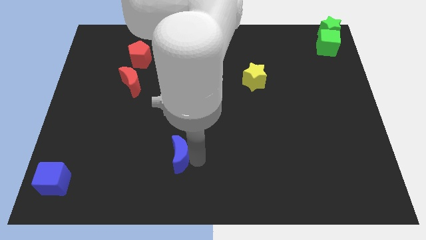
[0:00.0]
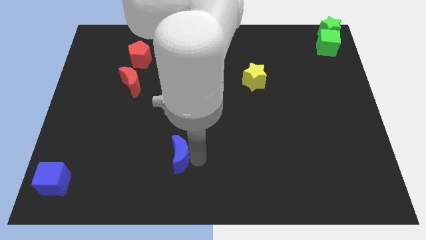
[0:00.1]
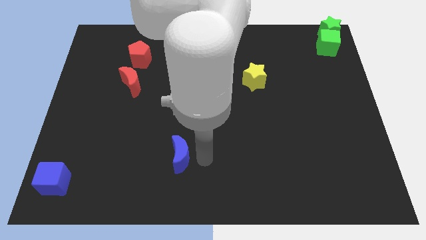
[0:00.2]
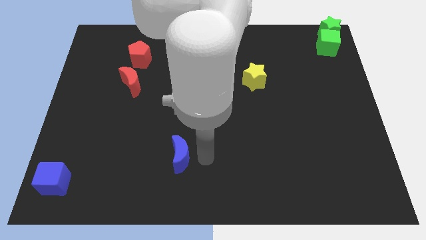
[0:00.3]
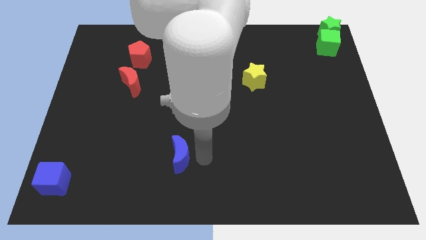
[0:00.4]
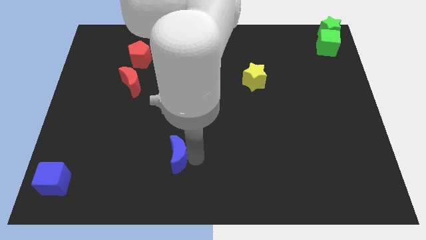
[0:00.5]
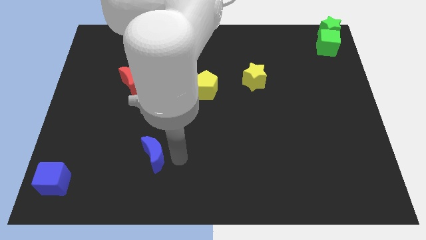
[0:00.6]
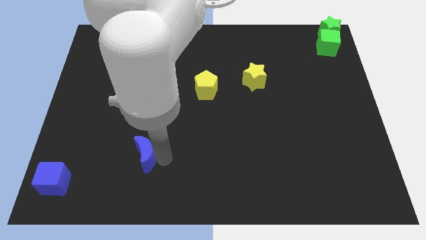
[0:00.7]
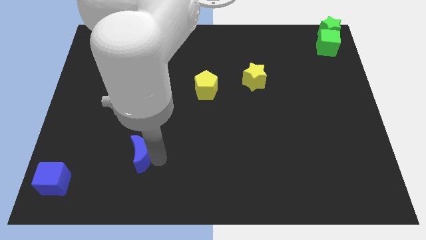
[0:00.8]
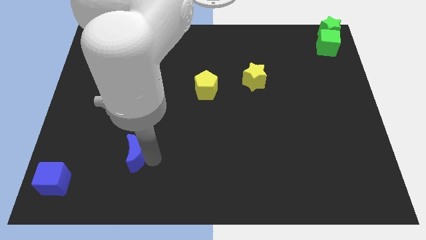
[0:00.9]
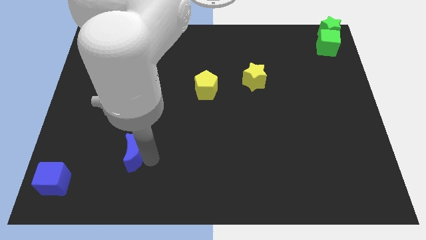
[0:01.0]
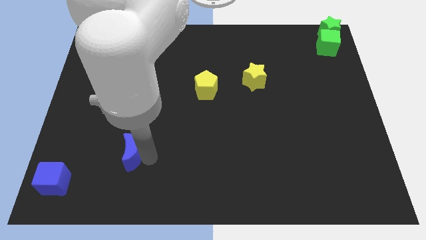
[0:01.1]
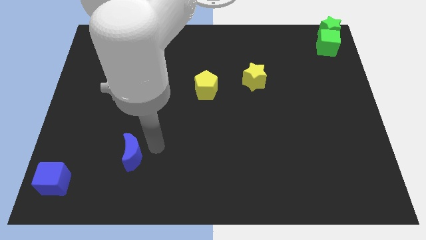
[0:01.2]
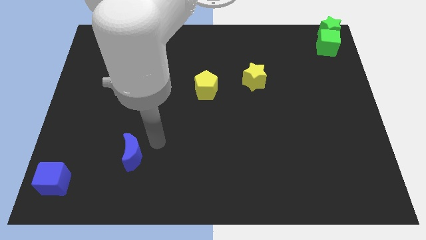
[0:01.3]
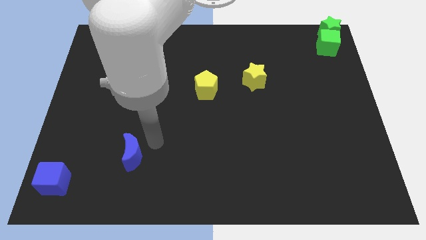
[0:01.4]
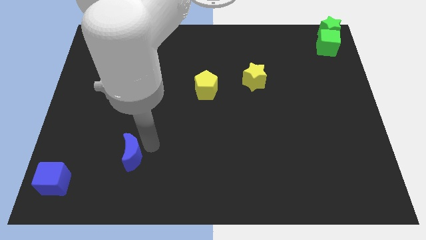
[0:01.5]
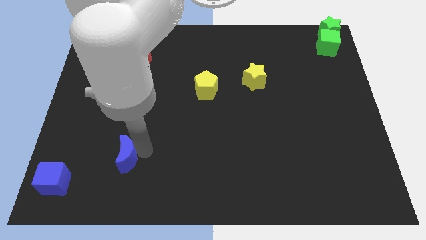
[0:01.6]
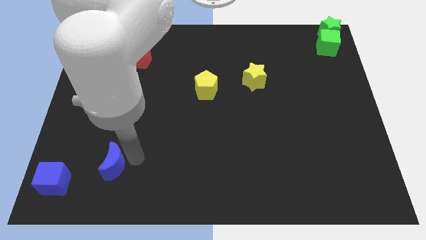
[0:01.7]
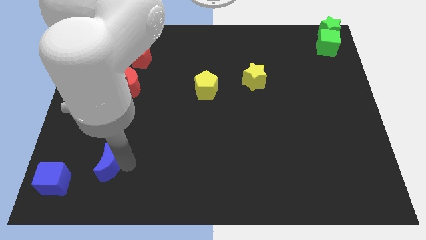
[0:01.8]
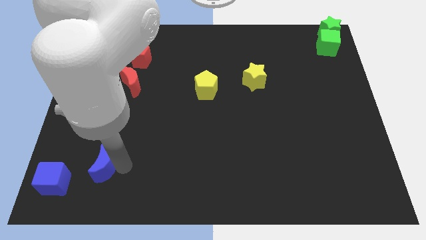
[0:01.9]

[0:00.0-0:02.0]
push the blue crescent to the bottom of the red crescent

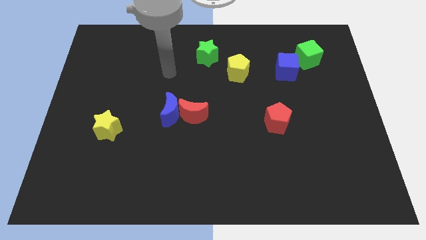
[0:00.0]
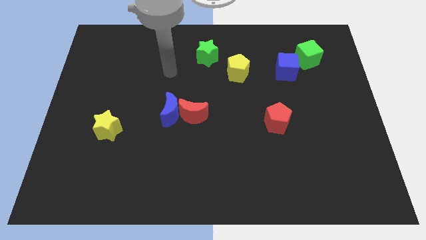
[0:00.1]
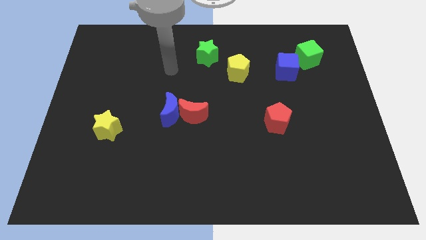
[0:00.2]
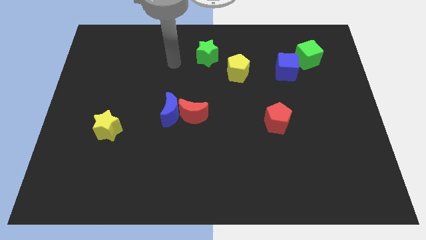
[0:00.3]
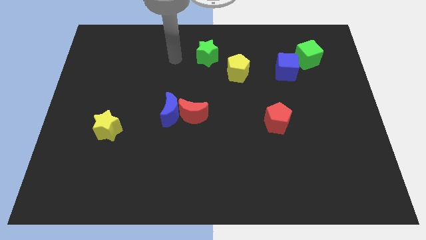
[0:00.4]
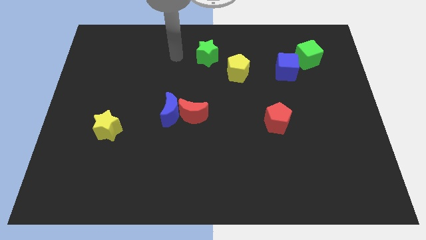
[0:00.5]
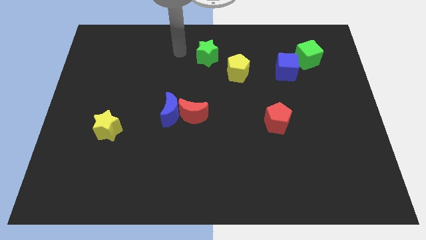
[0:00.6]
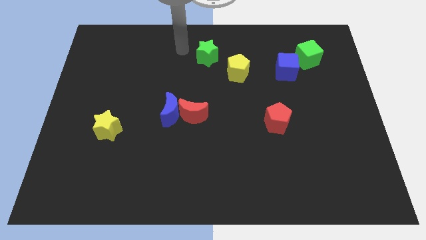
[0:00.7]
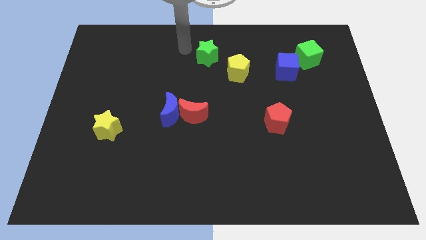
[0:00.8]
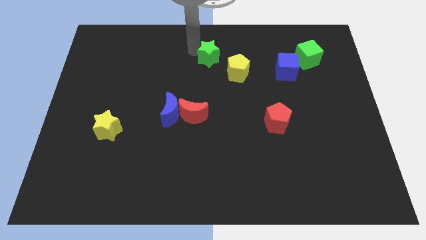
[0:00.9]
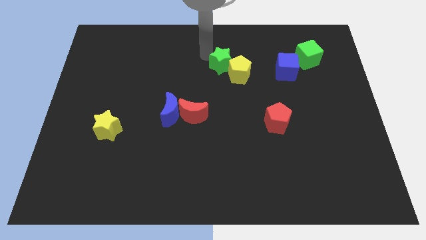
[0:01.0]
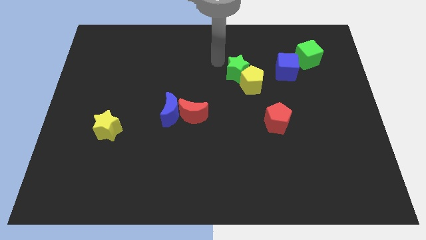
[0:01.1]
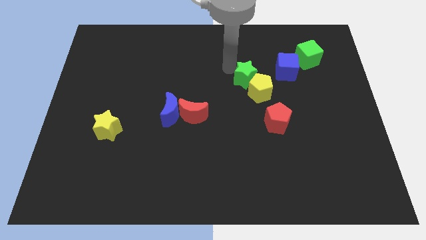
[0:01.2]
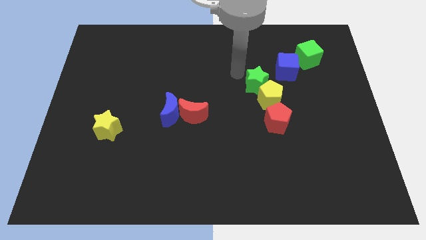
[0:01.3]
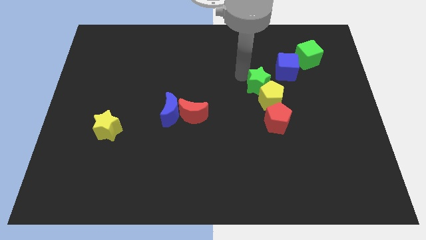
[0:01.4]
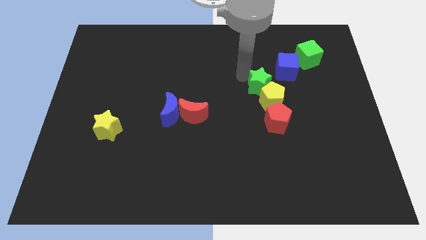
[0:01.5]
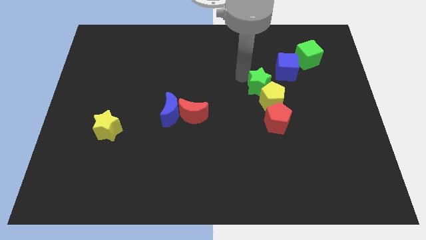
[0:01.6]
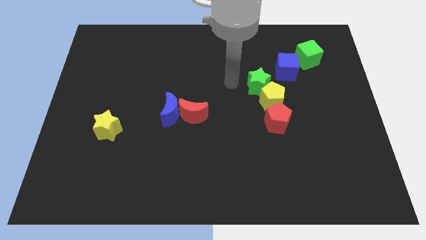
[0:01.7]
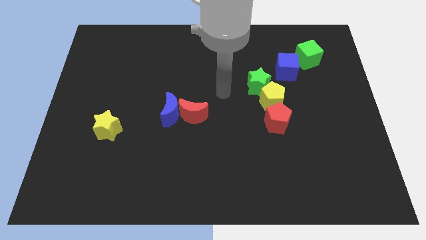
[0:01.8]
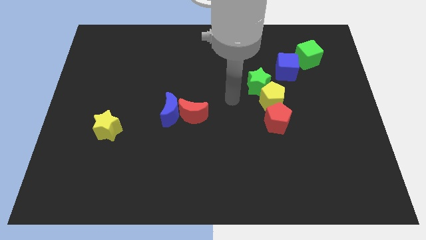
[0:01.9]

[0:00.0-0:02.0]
push the green star into the yellow pentagon

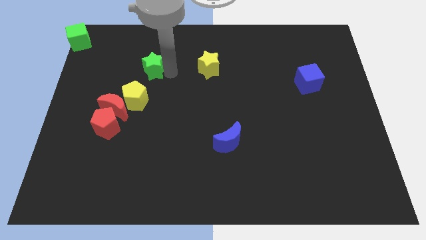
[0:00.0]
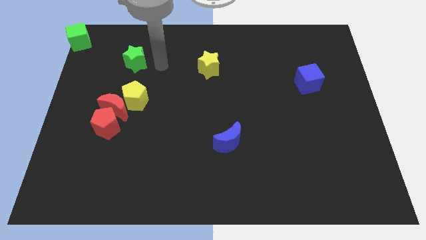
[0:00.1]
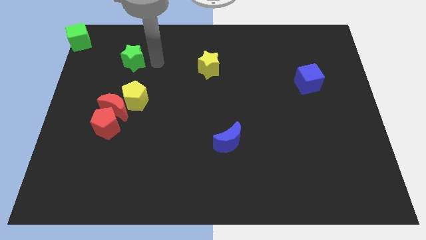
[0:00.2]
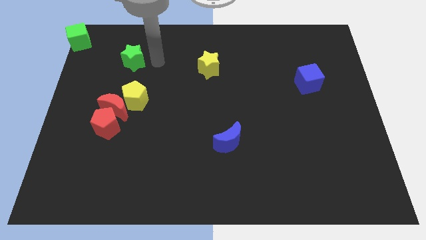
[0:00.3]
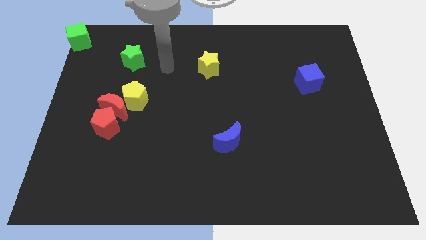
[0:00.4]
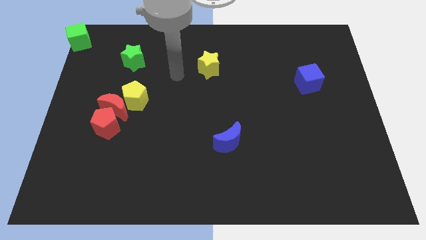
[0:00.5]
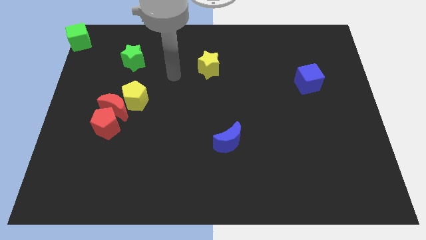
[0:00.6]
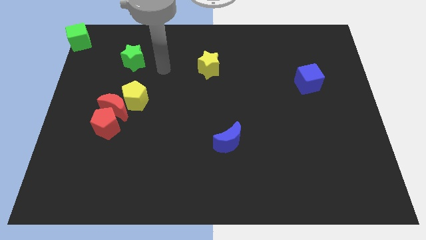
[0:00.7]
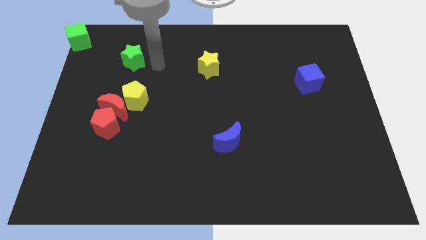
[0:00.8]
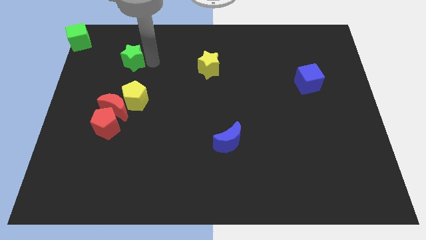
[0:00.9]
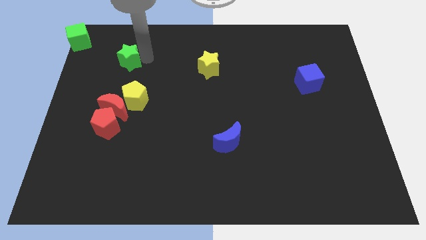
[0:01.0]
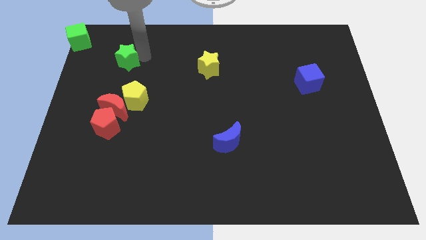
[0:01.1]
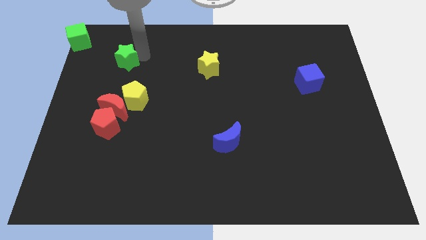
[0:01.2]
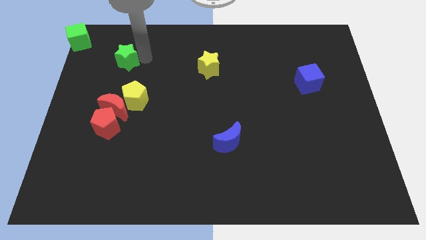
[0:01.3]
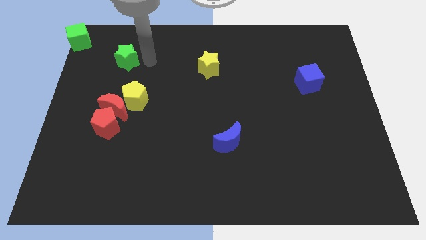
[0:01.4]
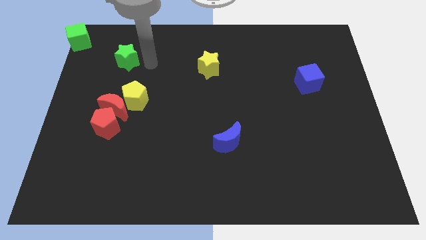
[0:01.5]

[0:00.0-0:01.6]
move the green star to the top of yellow pentagon

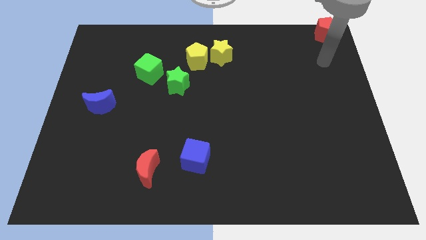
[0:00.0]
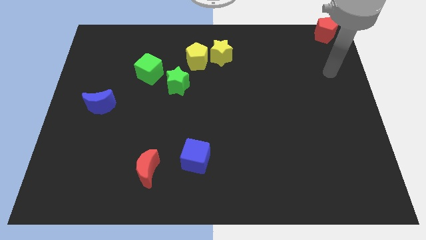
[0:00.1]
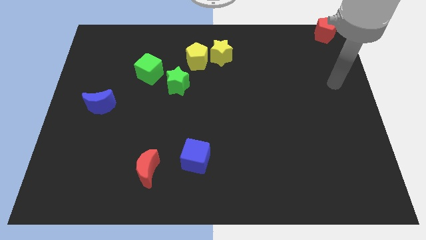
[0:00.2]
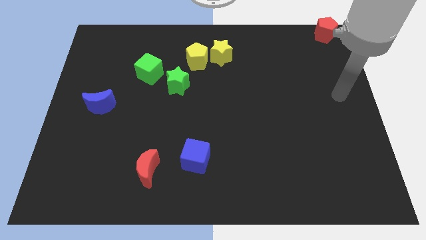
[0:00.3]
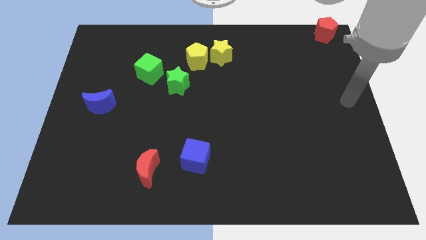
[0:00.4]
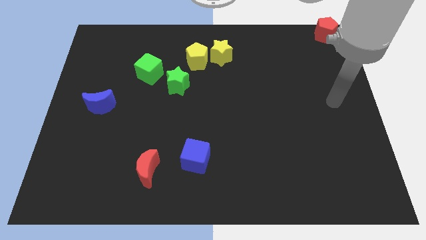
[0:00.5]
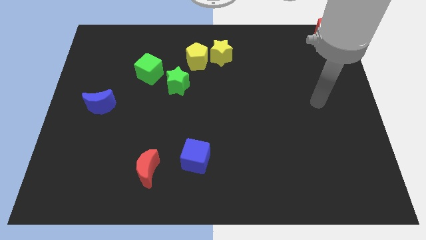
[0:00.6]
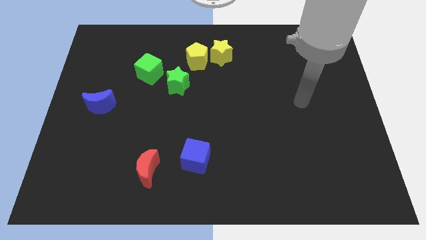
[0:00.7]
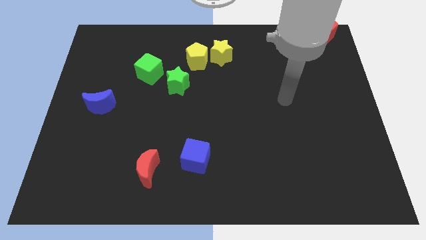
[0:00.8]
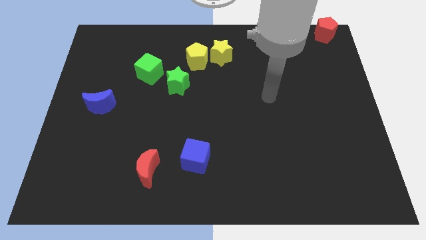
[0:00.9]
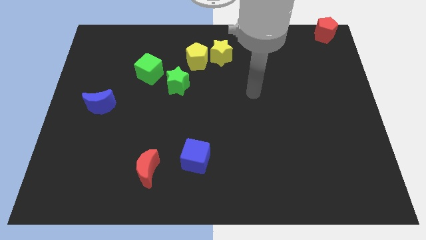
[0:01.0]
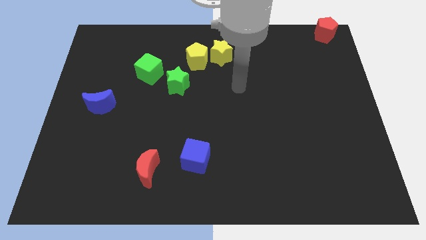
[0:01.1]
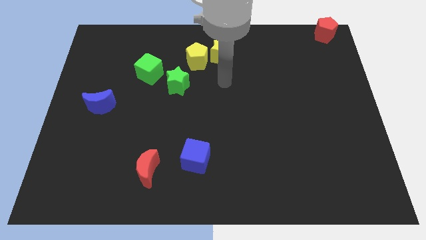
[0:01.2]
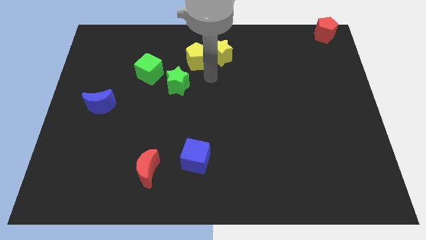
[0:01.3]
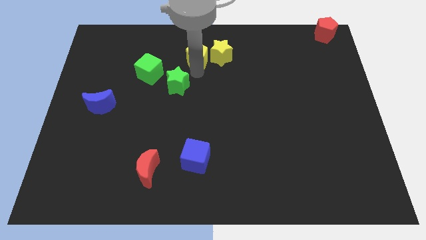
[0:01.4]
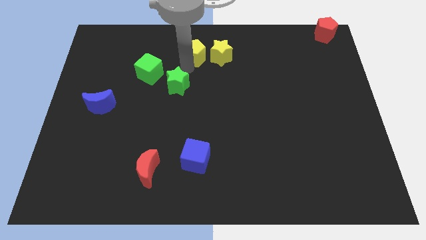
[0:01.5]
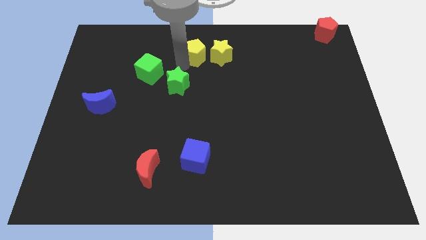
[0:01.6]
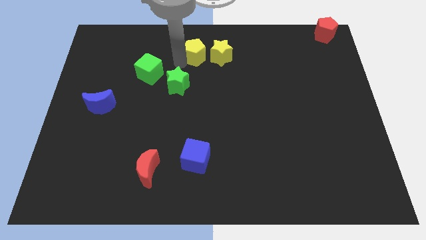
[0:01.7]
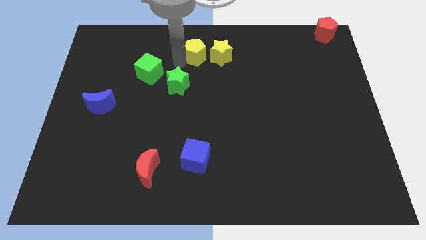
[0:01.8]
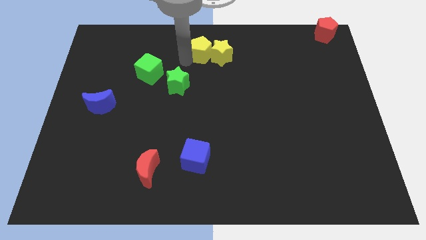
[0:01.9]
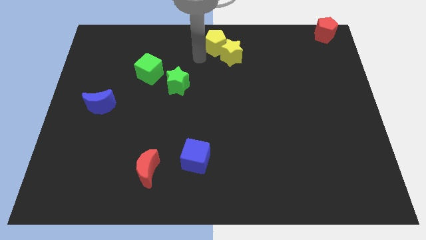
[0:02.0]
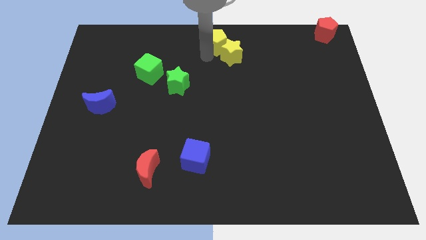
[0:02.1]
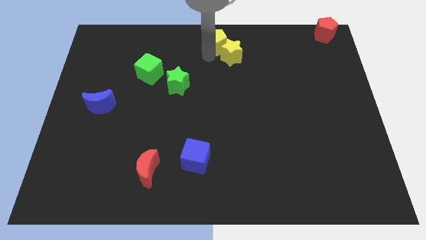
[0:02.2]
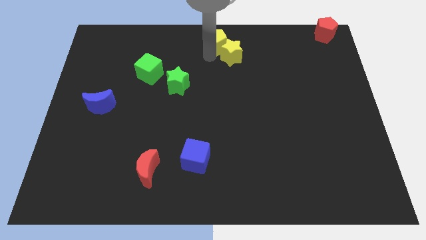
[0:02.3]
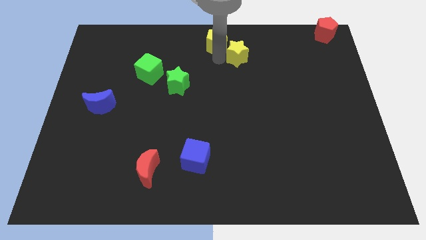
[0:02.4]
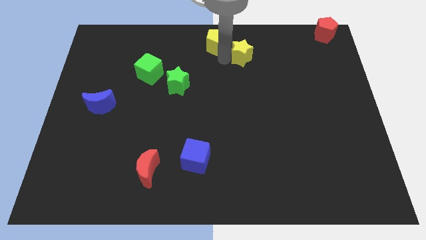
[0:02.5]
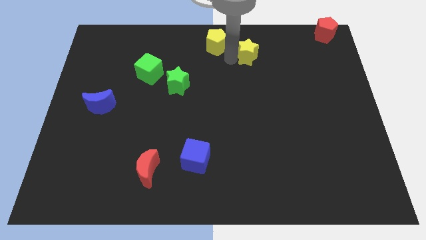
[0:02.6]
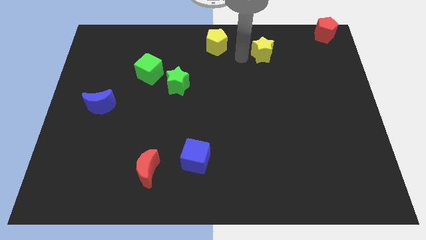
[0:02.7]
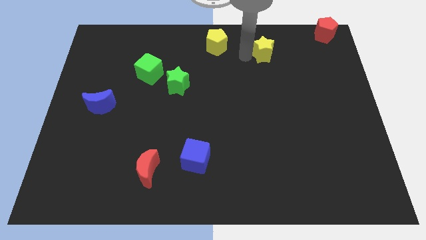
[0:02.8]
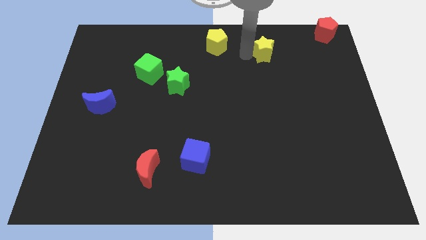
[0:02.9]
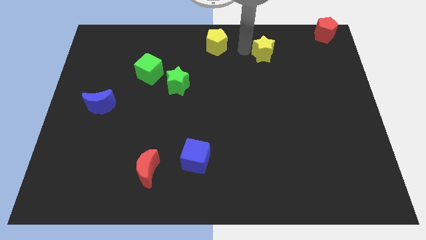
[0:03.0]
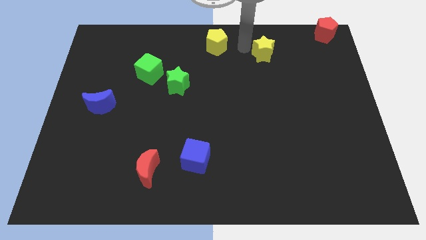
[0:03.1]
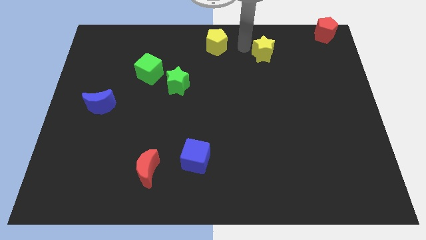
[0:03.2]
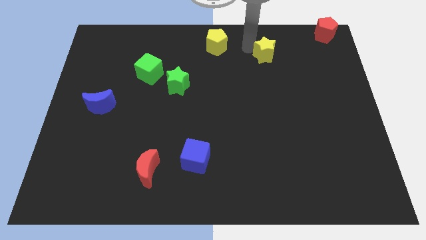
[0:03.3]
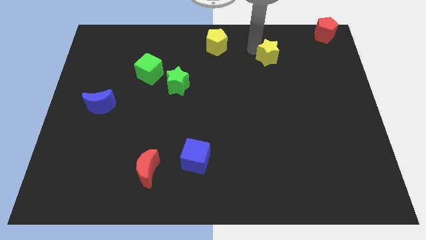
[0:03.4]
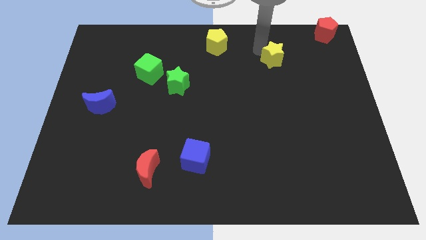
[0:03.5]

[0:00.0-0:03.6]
move the yellow star diagonally on the bottom right side of the yellow pentagon
